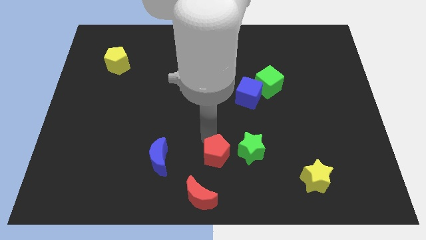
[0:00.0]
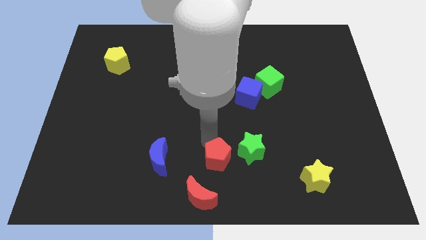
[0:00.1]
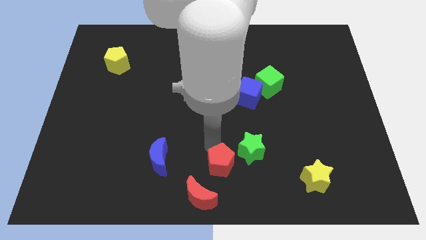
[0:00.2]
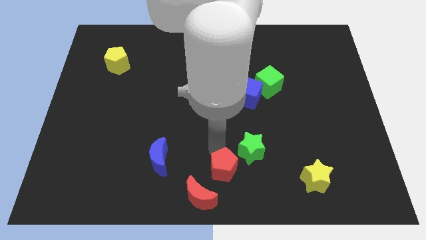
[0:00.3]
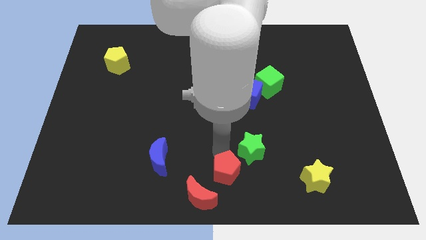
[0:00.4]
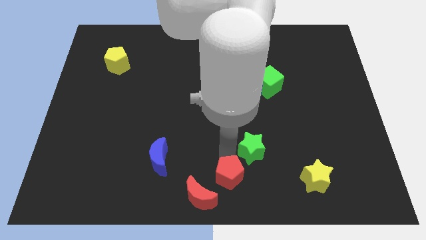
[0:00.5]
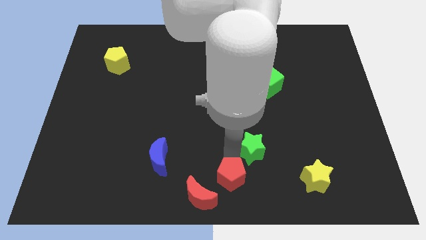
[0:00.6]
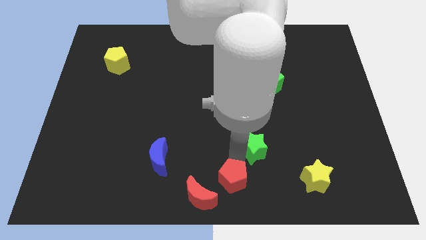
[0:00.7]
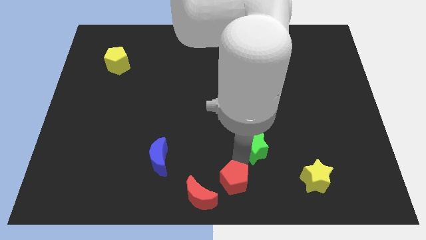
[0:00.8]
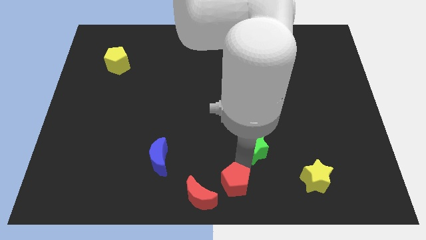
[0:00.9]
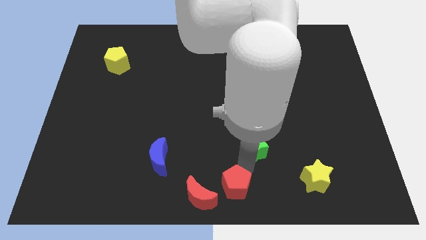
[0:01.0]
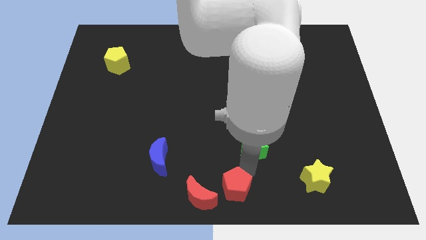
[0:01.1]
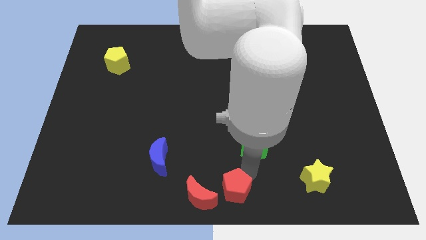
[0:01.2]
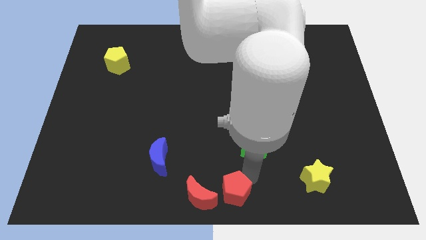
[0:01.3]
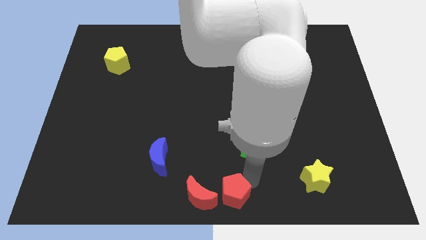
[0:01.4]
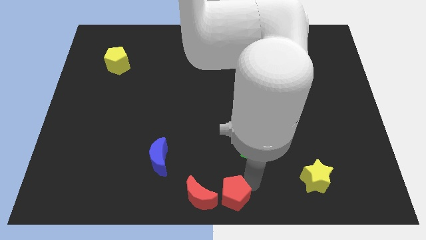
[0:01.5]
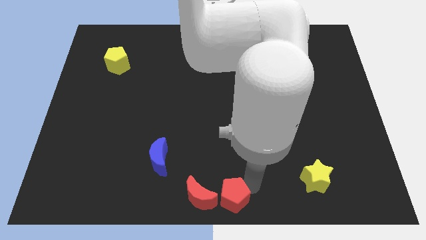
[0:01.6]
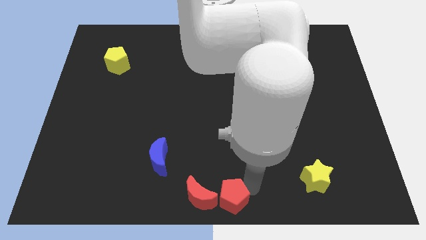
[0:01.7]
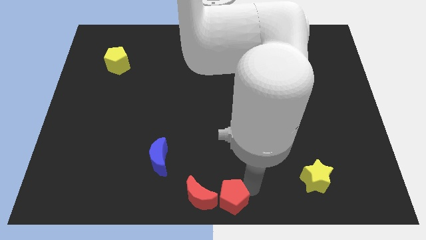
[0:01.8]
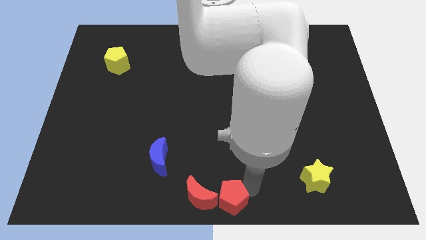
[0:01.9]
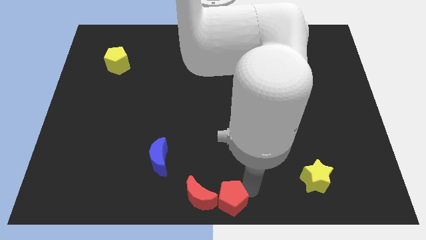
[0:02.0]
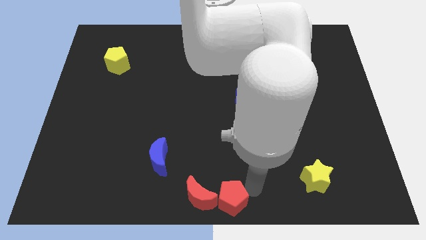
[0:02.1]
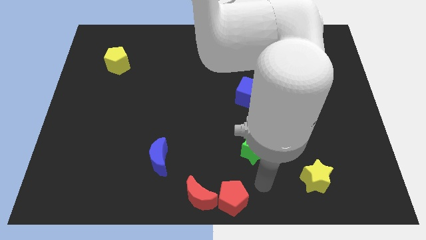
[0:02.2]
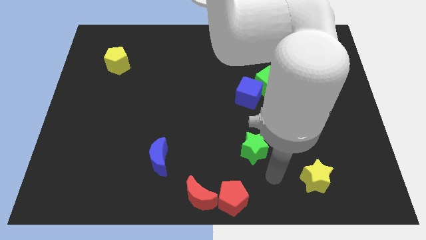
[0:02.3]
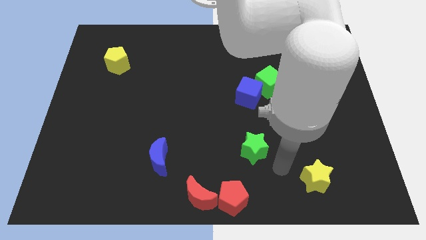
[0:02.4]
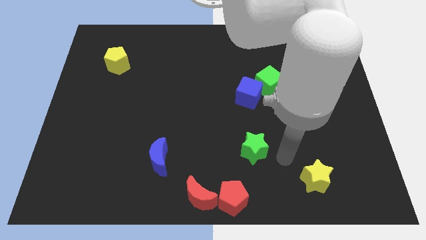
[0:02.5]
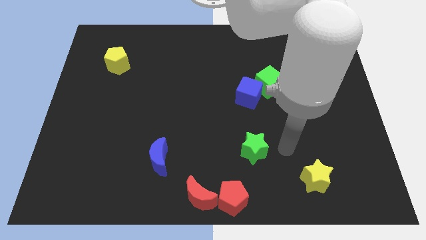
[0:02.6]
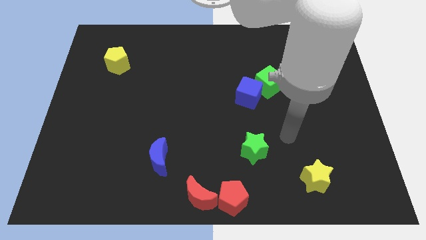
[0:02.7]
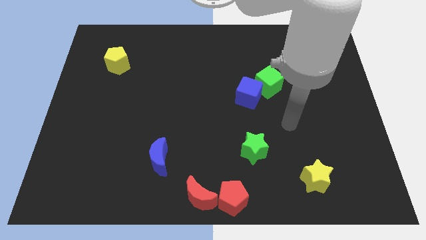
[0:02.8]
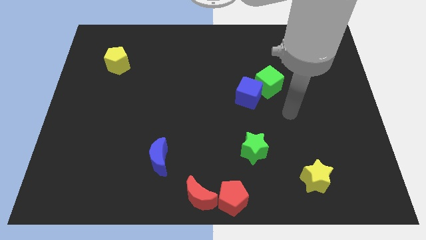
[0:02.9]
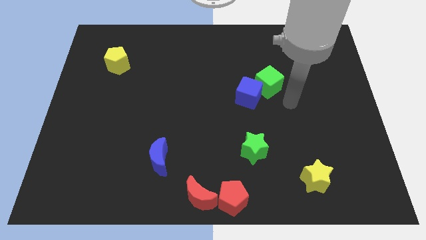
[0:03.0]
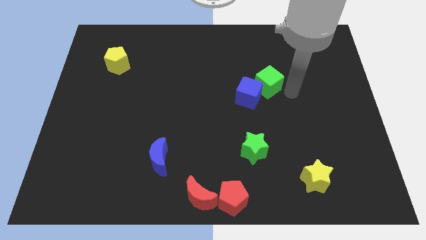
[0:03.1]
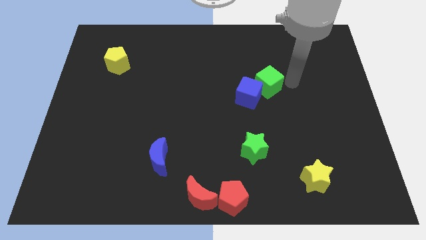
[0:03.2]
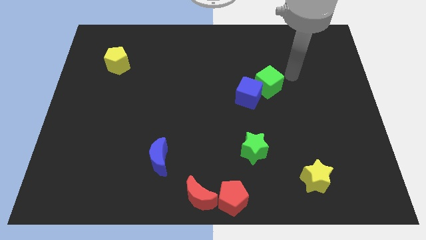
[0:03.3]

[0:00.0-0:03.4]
move the red pentagon at the bottom center

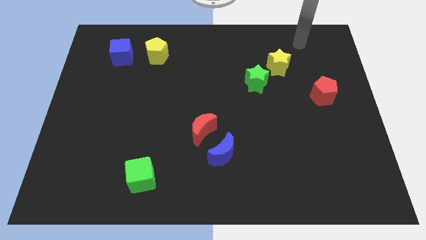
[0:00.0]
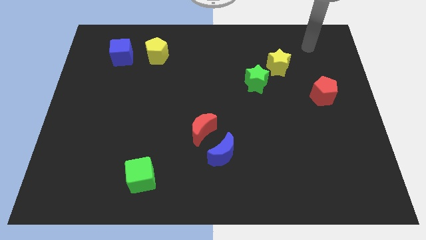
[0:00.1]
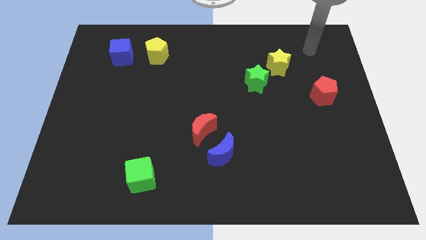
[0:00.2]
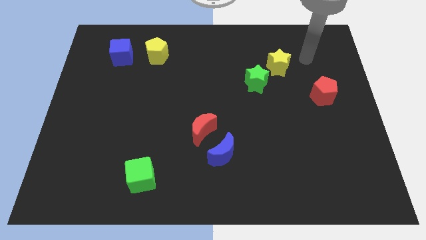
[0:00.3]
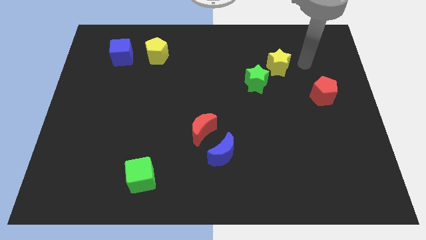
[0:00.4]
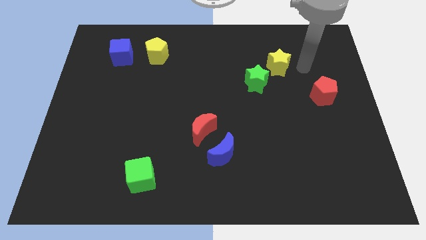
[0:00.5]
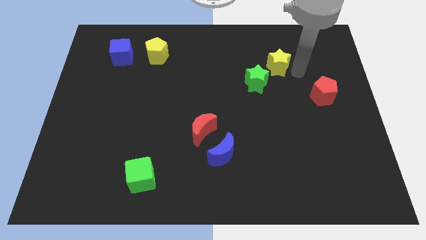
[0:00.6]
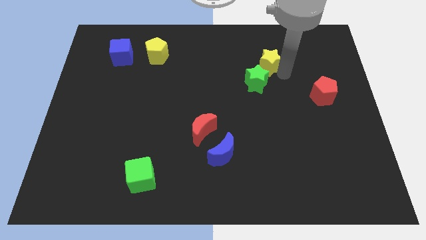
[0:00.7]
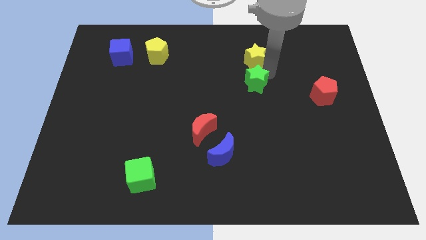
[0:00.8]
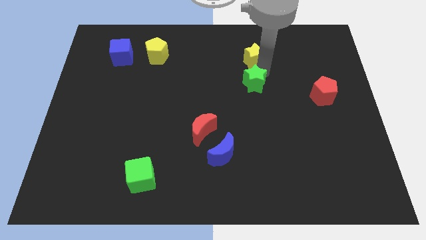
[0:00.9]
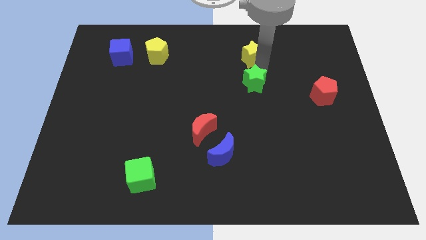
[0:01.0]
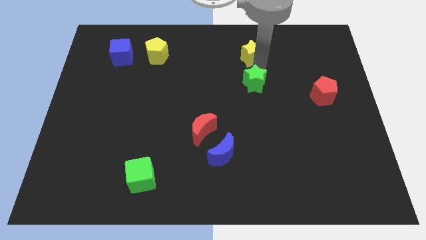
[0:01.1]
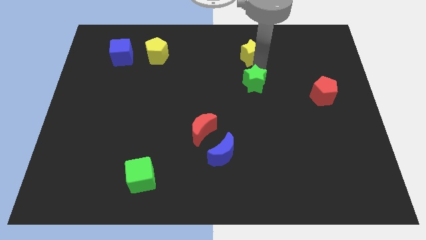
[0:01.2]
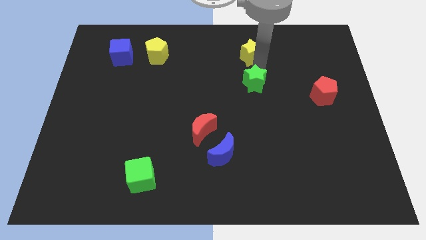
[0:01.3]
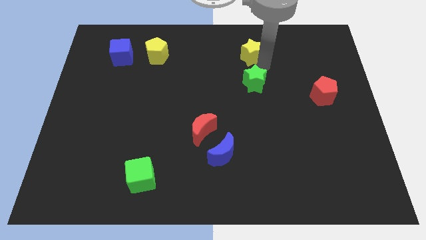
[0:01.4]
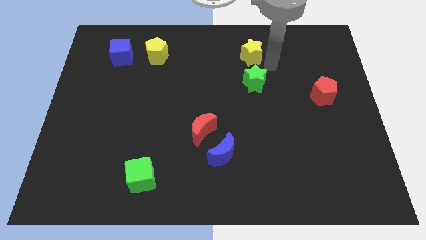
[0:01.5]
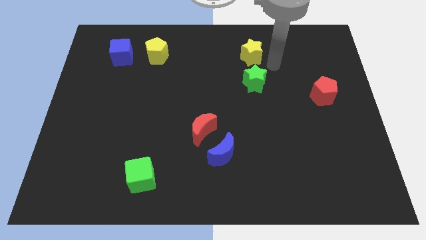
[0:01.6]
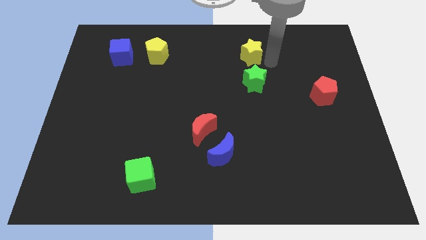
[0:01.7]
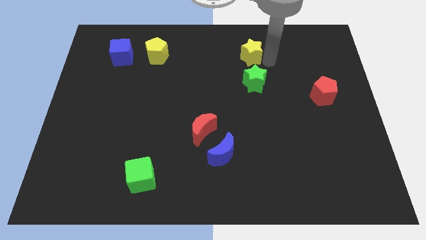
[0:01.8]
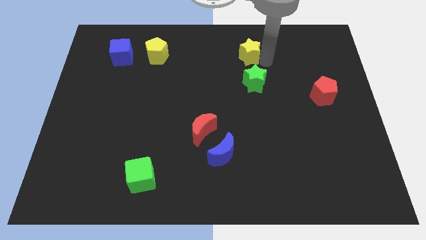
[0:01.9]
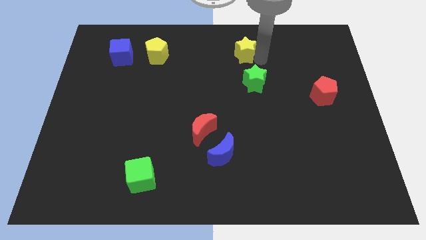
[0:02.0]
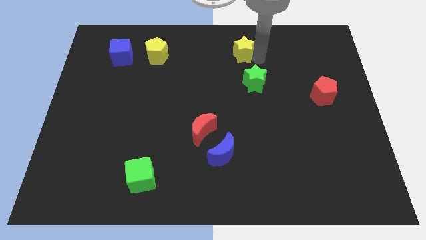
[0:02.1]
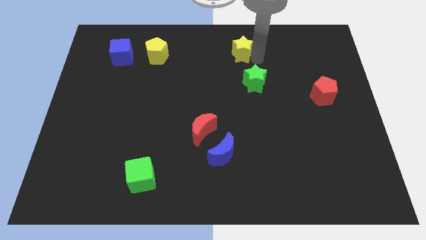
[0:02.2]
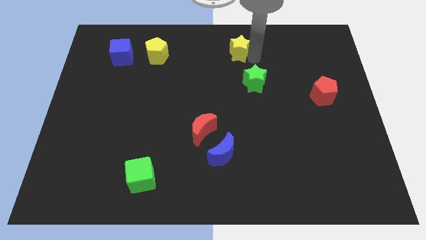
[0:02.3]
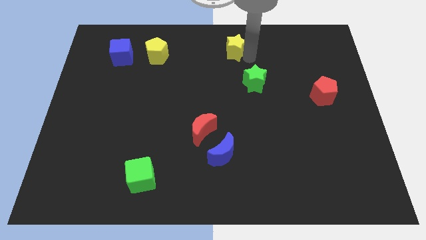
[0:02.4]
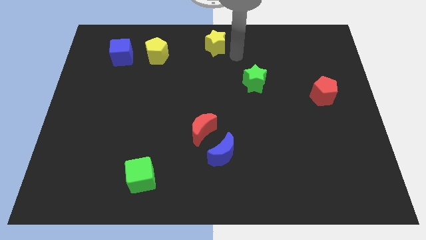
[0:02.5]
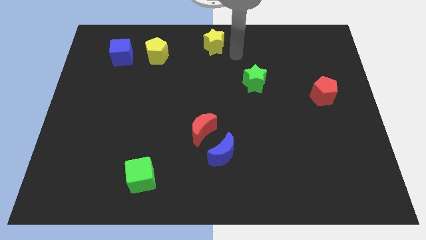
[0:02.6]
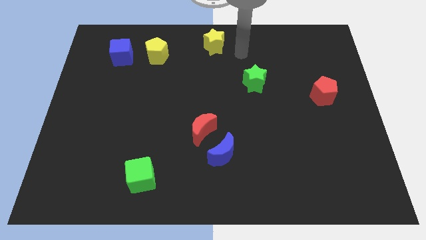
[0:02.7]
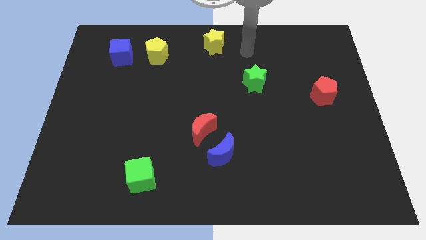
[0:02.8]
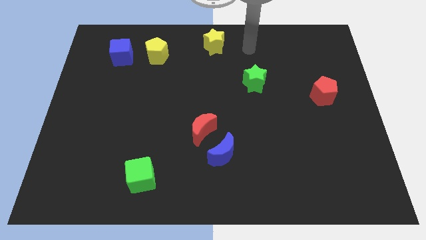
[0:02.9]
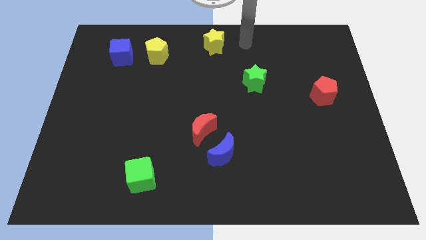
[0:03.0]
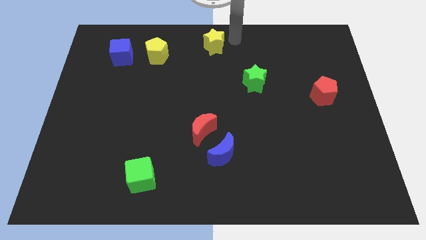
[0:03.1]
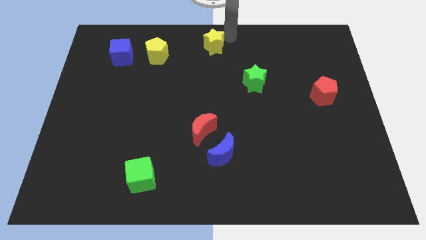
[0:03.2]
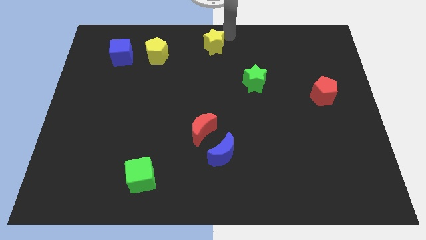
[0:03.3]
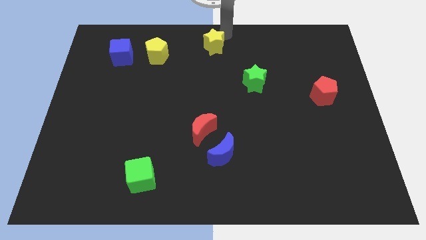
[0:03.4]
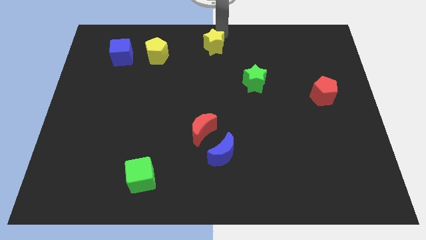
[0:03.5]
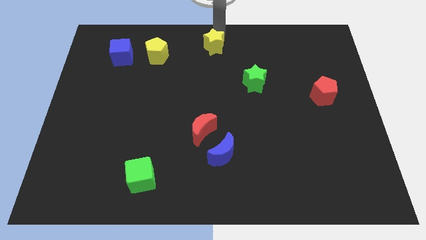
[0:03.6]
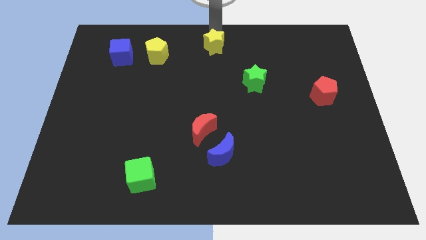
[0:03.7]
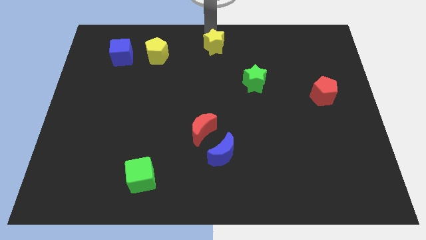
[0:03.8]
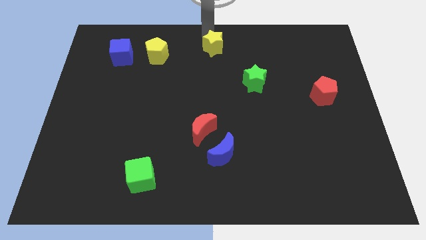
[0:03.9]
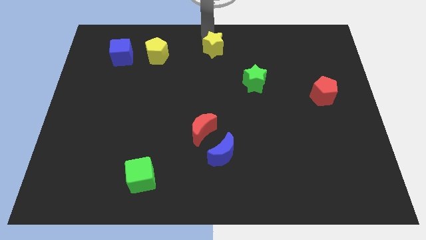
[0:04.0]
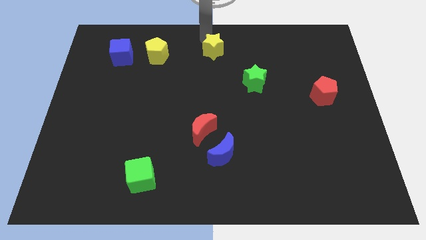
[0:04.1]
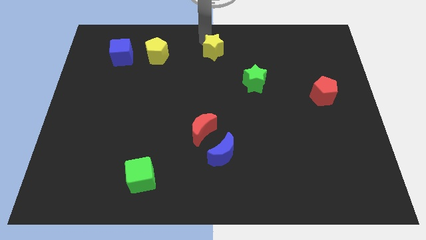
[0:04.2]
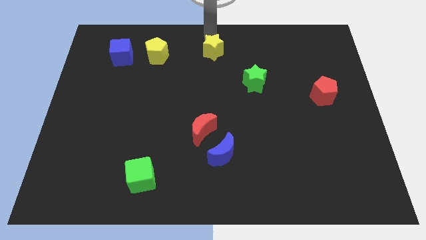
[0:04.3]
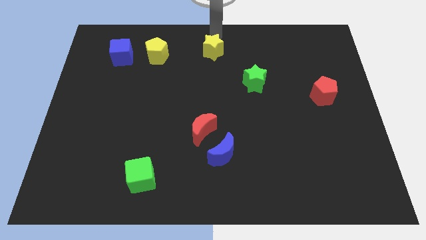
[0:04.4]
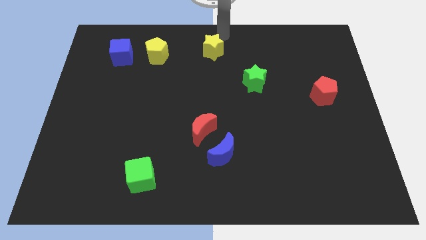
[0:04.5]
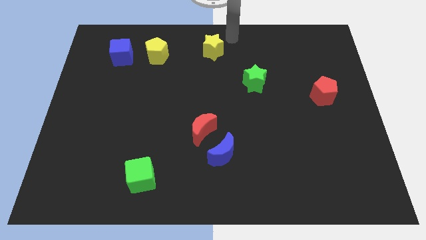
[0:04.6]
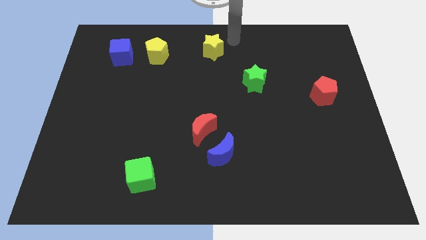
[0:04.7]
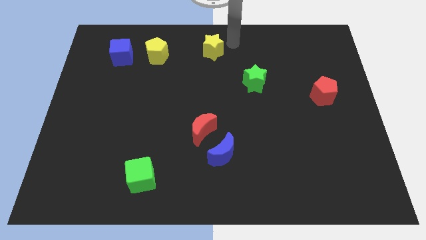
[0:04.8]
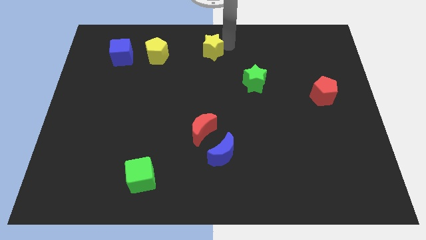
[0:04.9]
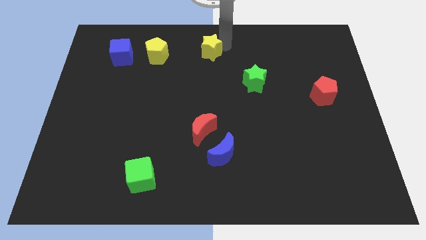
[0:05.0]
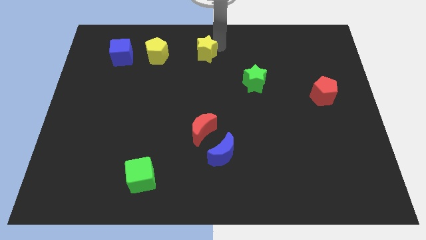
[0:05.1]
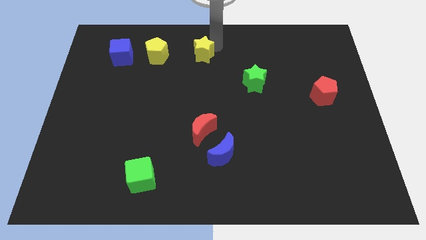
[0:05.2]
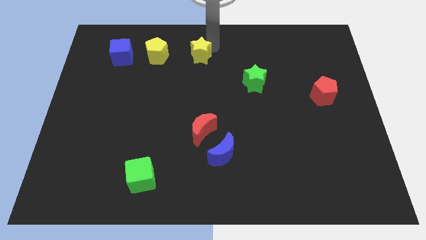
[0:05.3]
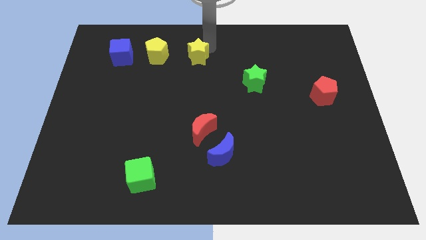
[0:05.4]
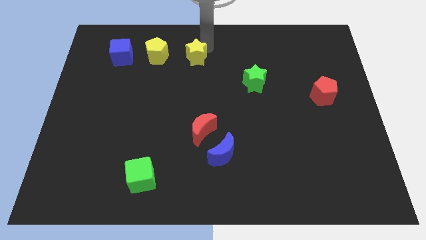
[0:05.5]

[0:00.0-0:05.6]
place the yellow star parallel to yellow pentagon

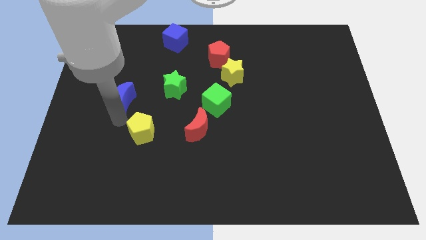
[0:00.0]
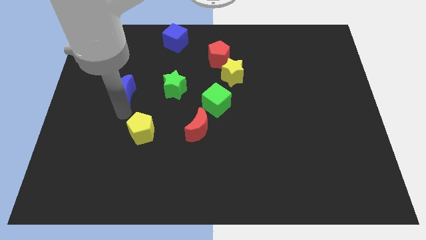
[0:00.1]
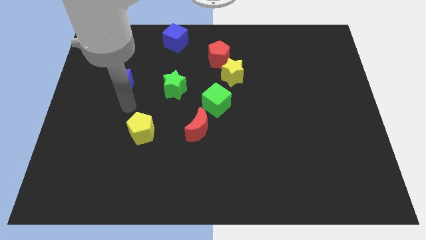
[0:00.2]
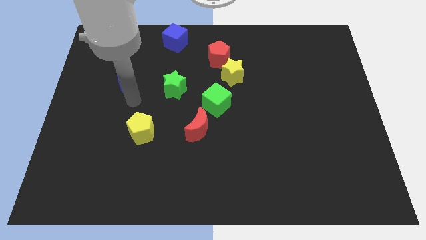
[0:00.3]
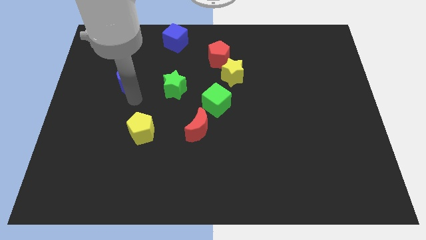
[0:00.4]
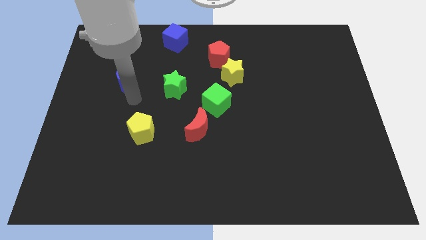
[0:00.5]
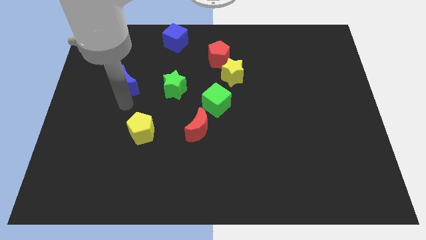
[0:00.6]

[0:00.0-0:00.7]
push the blue crescent to the left of the green star
